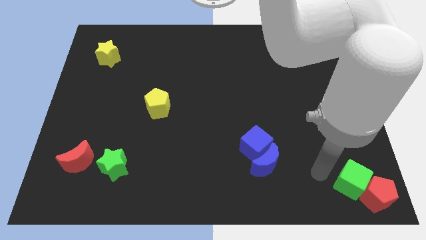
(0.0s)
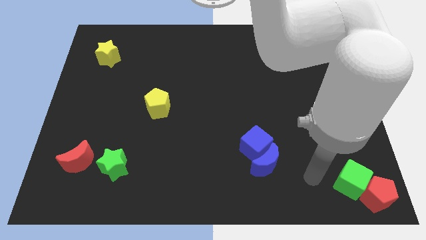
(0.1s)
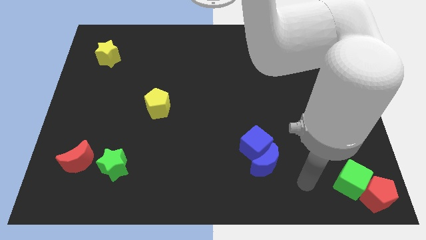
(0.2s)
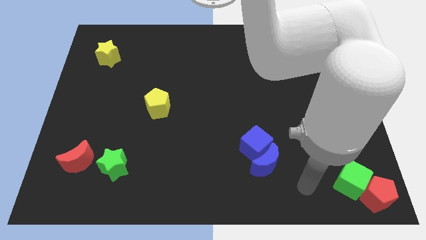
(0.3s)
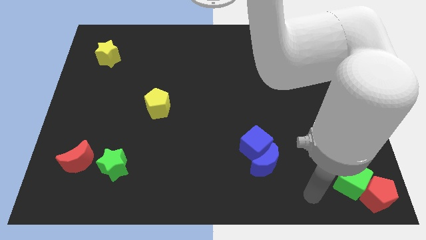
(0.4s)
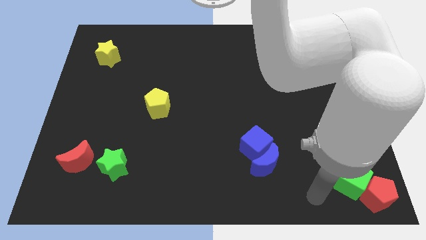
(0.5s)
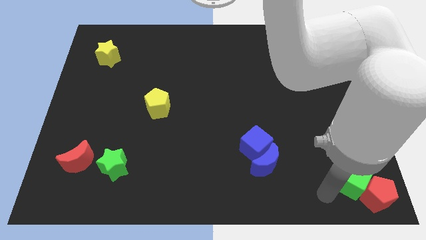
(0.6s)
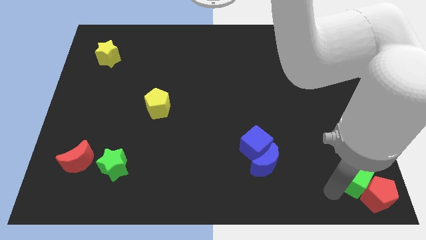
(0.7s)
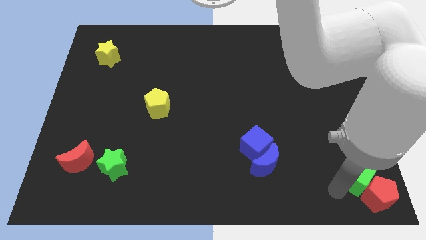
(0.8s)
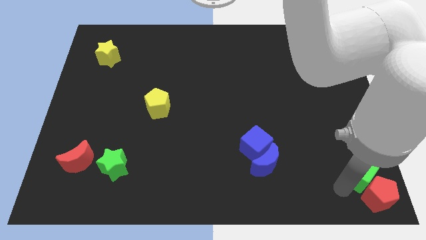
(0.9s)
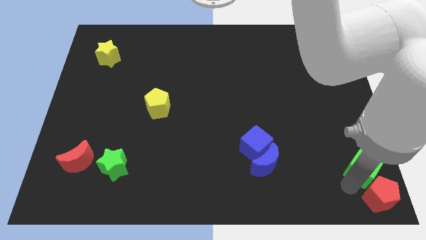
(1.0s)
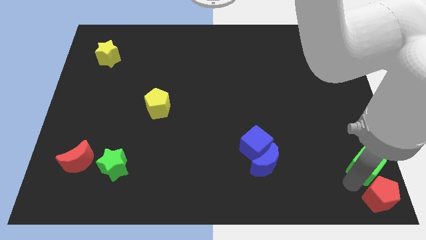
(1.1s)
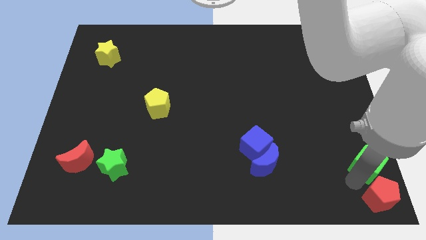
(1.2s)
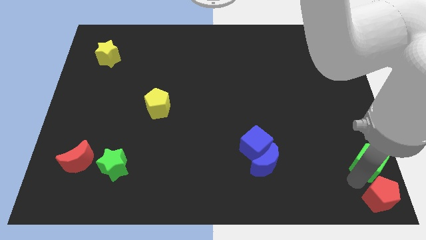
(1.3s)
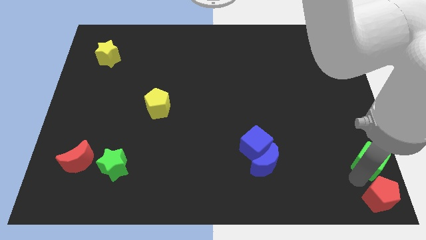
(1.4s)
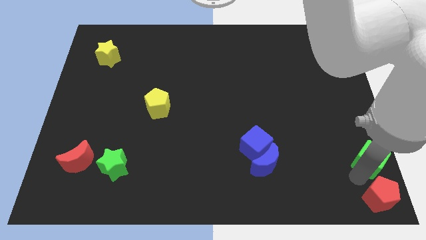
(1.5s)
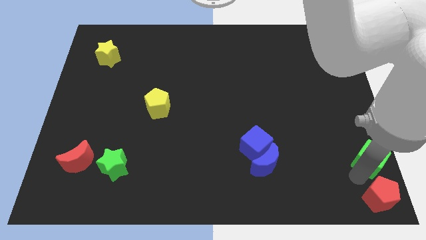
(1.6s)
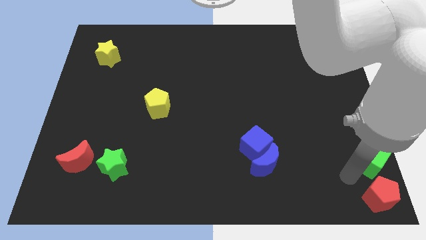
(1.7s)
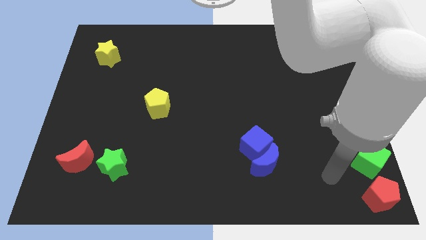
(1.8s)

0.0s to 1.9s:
slightly move the green cube to the right side of the board

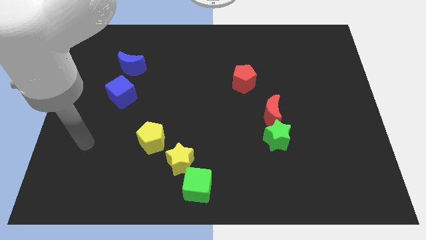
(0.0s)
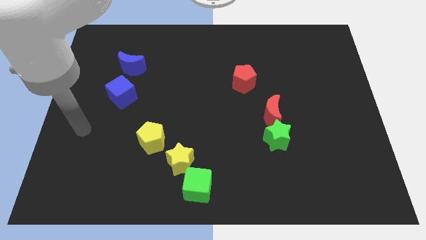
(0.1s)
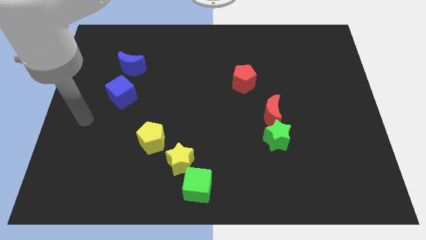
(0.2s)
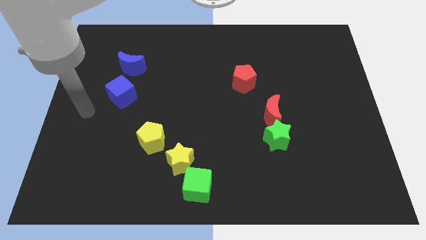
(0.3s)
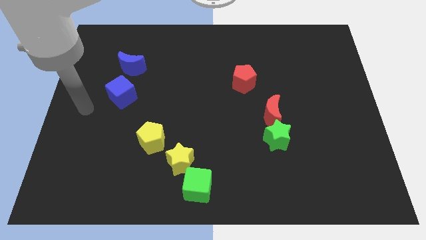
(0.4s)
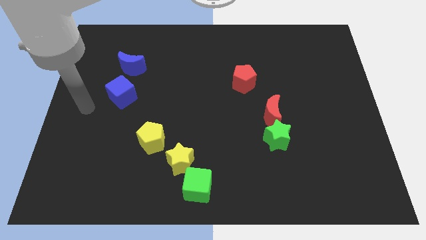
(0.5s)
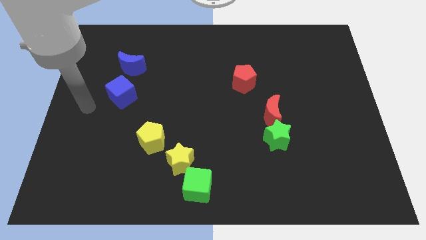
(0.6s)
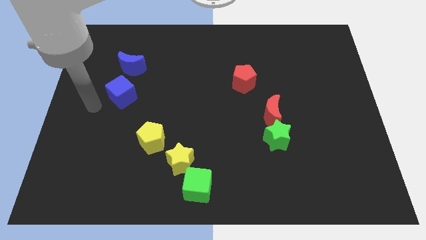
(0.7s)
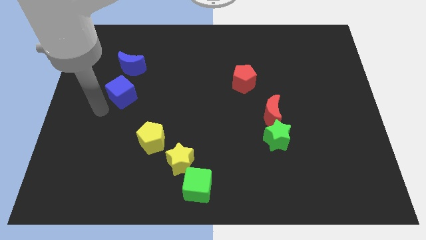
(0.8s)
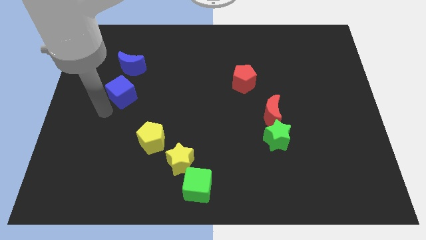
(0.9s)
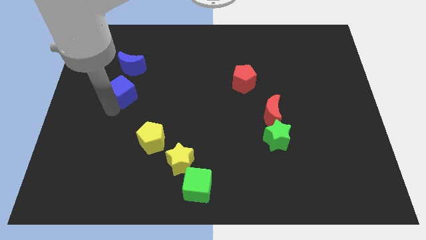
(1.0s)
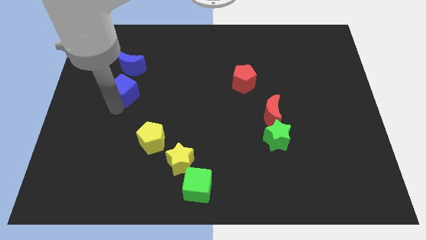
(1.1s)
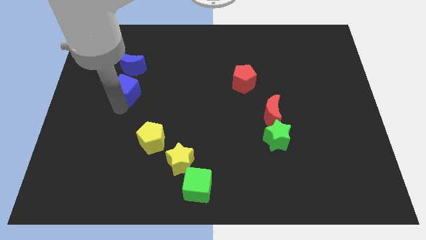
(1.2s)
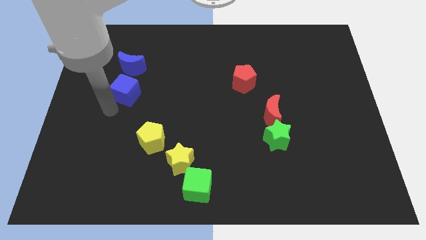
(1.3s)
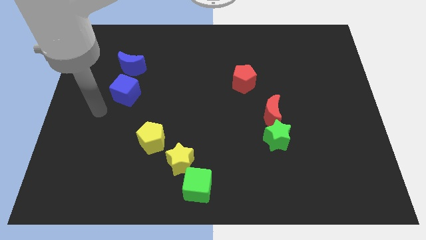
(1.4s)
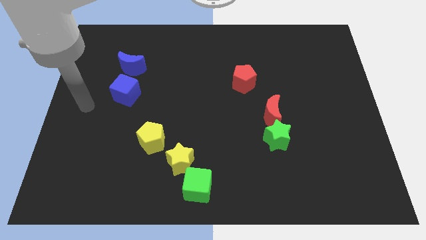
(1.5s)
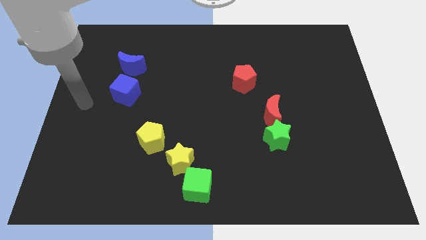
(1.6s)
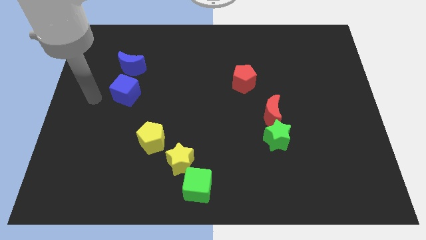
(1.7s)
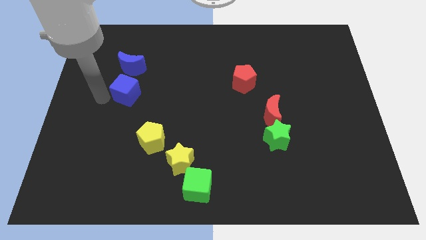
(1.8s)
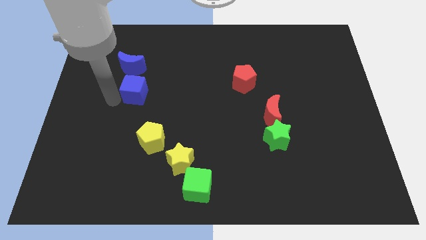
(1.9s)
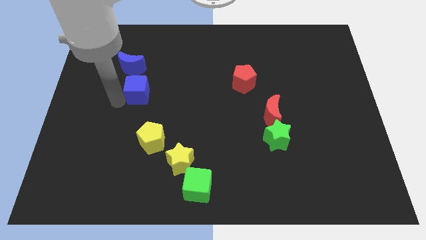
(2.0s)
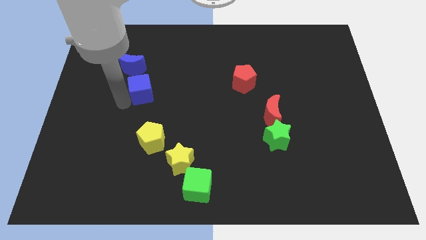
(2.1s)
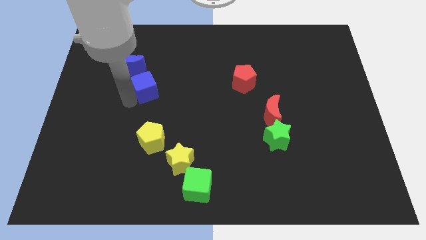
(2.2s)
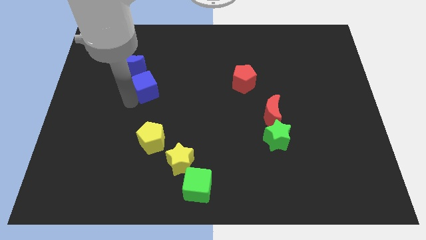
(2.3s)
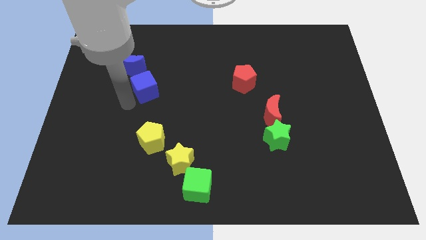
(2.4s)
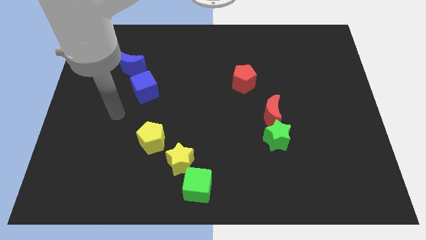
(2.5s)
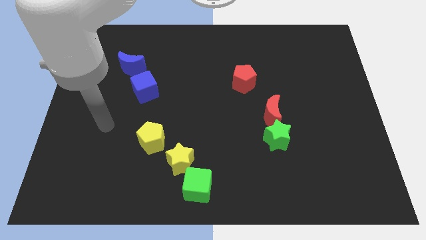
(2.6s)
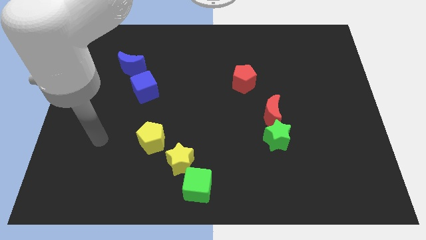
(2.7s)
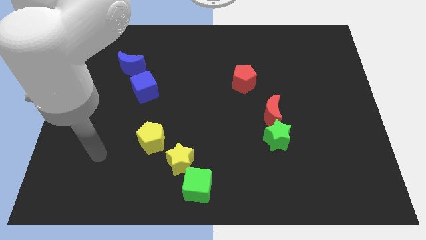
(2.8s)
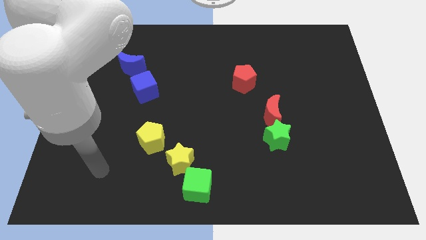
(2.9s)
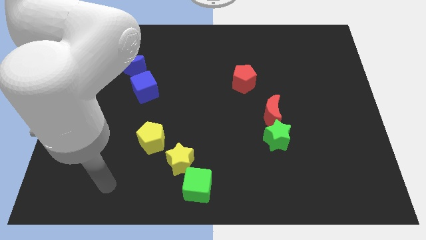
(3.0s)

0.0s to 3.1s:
move blue cube towards blue moon

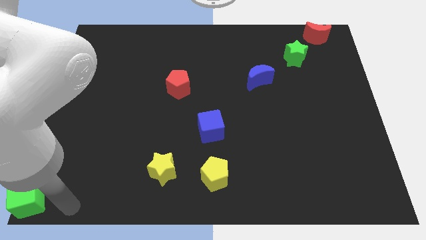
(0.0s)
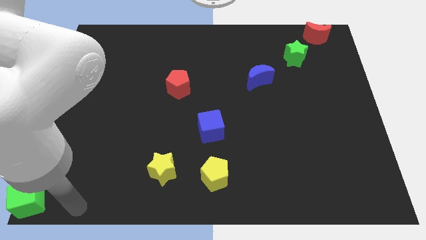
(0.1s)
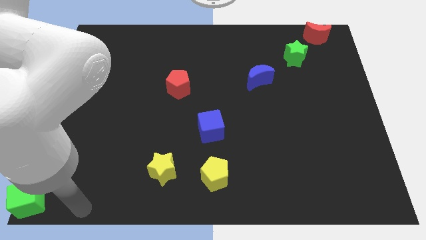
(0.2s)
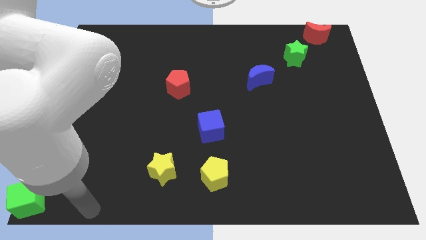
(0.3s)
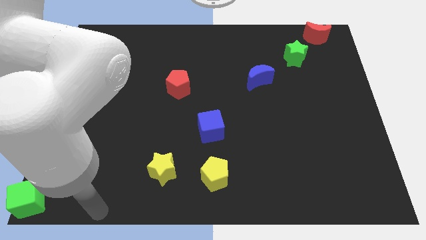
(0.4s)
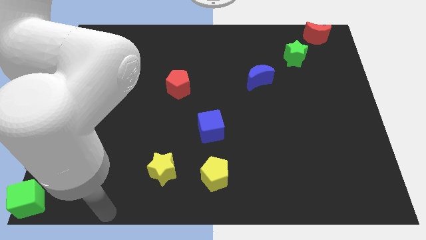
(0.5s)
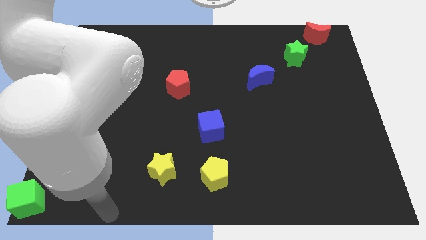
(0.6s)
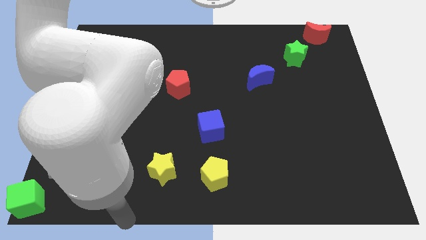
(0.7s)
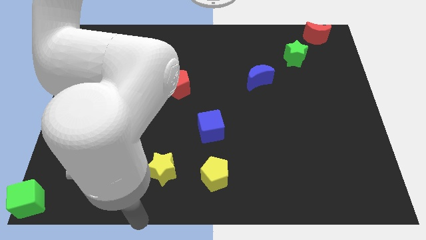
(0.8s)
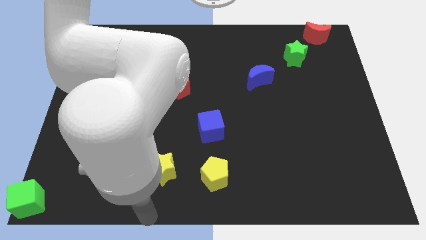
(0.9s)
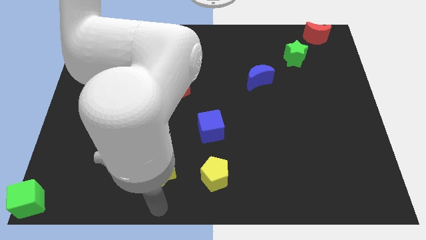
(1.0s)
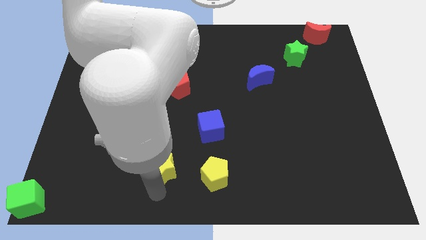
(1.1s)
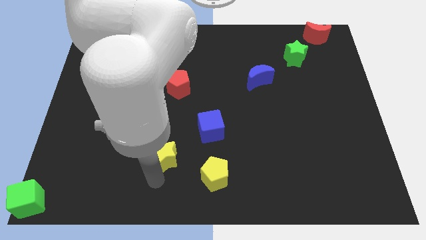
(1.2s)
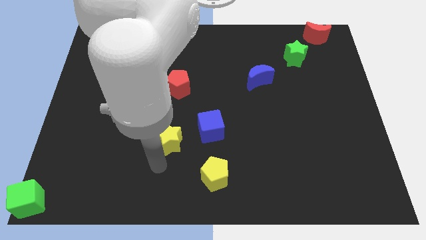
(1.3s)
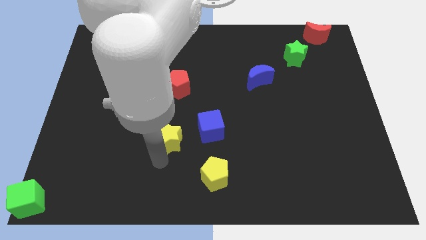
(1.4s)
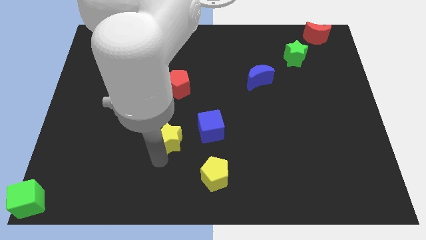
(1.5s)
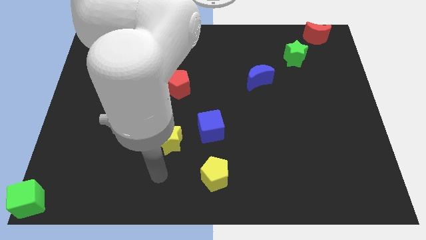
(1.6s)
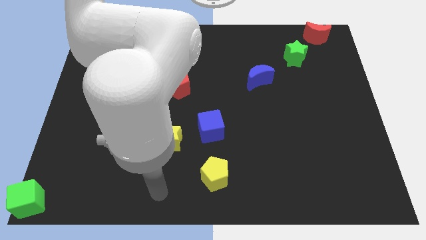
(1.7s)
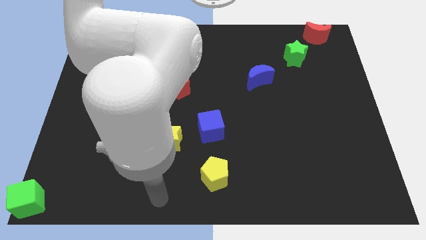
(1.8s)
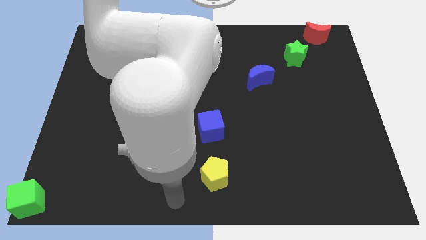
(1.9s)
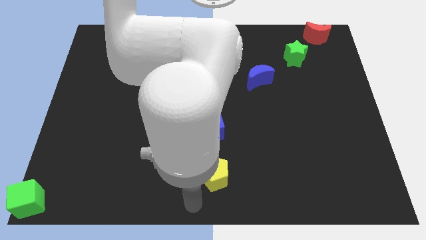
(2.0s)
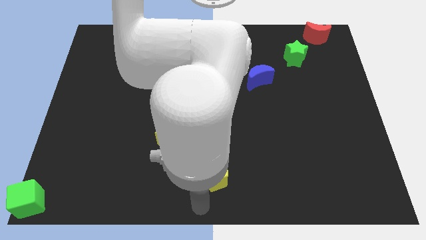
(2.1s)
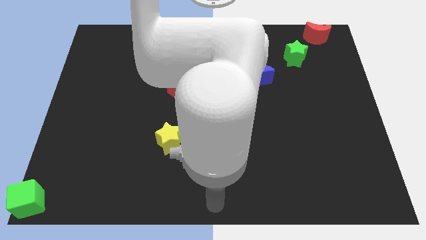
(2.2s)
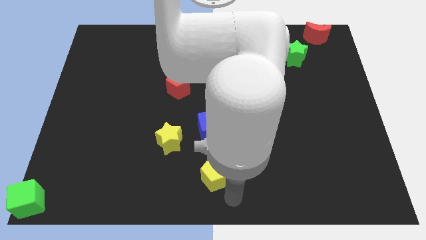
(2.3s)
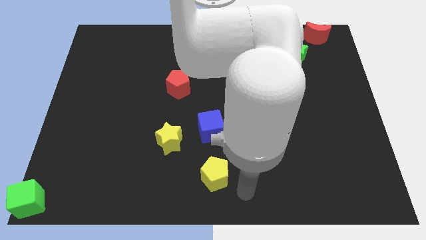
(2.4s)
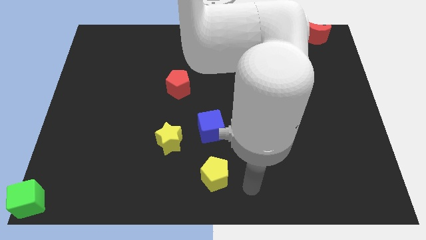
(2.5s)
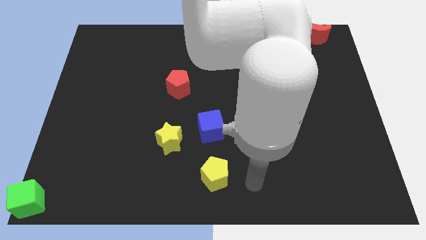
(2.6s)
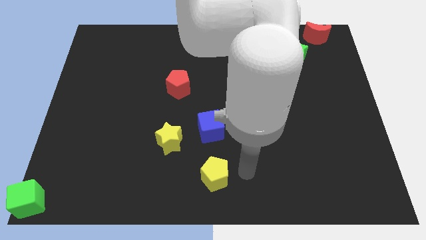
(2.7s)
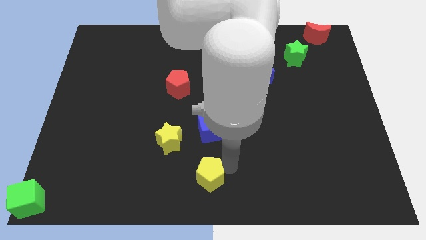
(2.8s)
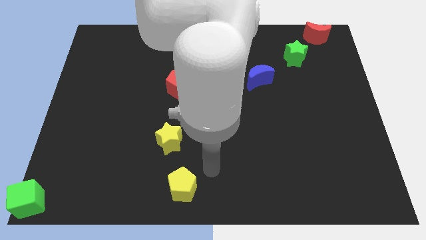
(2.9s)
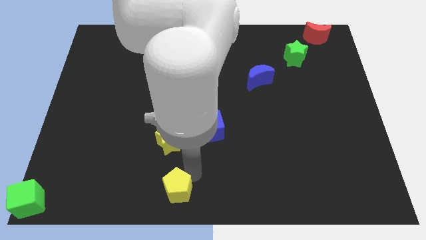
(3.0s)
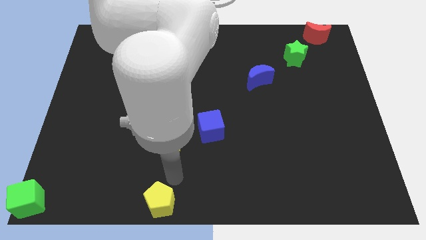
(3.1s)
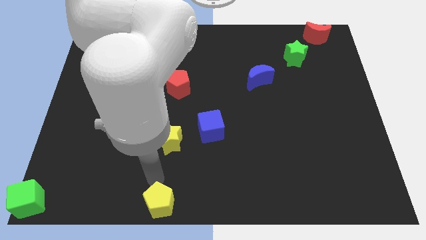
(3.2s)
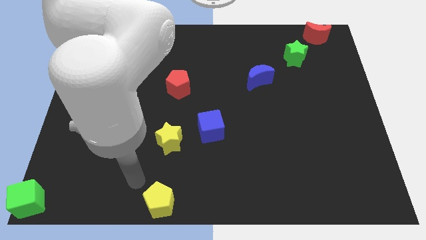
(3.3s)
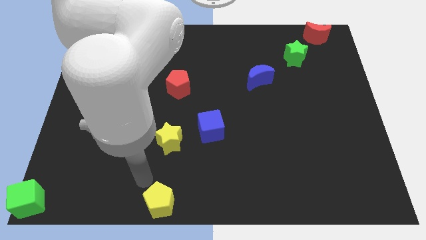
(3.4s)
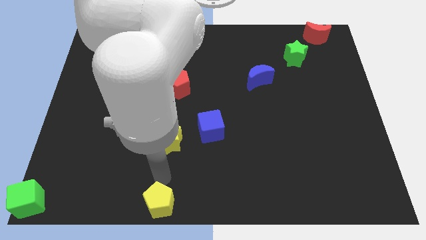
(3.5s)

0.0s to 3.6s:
move both the yellow blocks vertical to each other

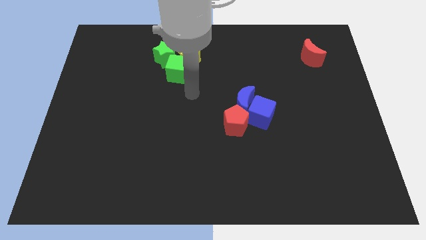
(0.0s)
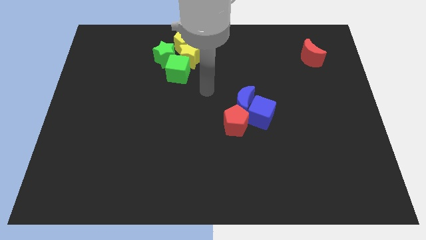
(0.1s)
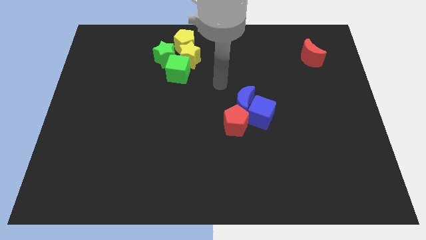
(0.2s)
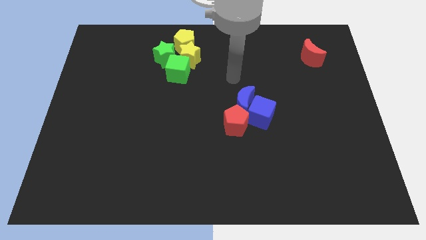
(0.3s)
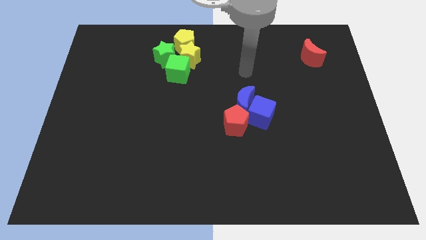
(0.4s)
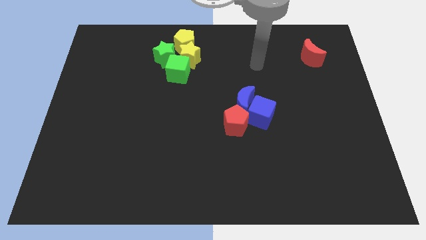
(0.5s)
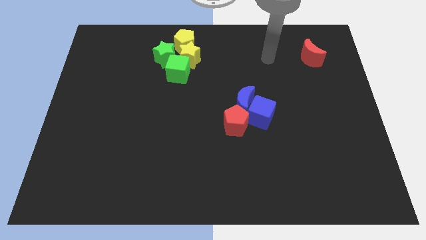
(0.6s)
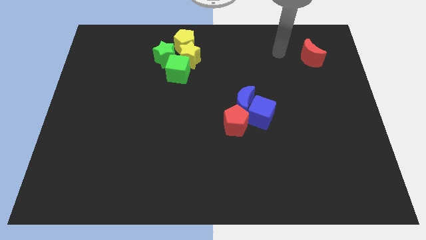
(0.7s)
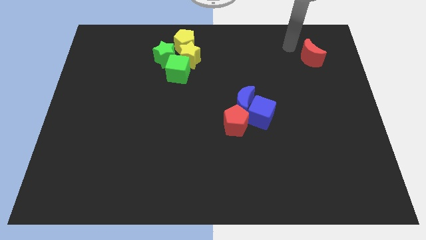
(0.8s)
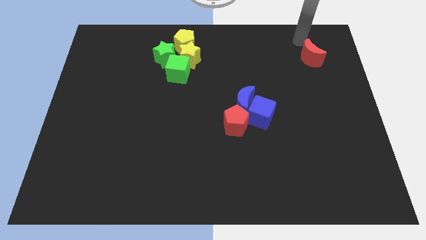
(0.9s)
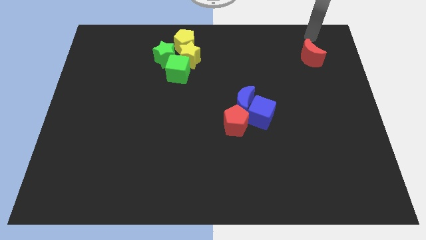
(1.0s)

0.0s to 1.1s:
place your arm at the top of the red crescent
